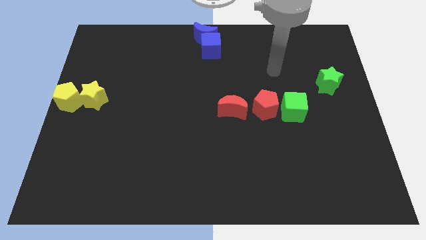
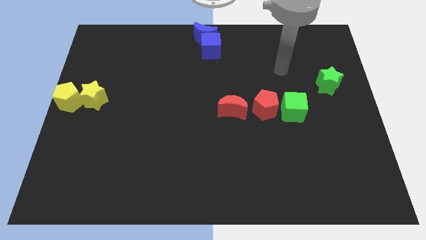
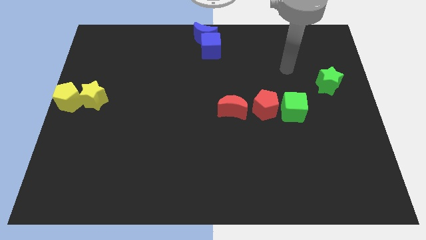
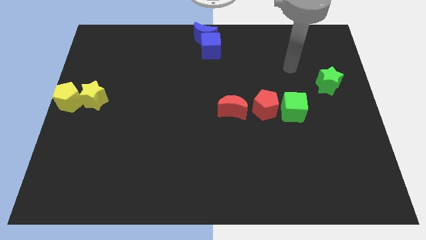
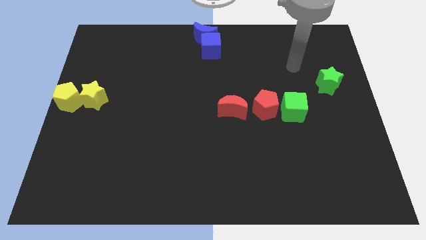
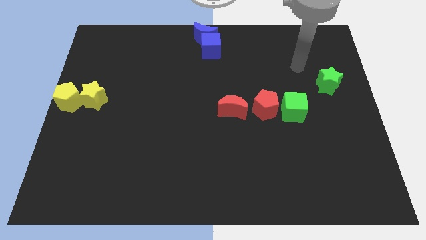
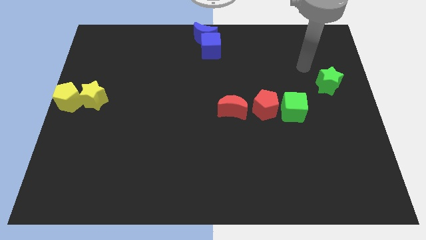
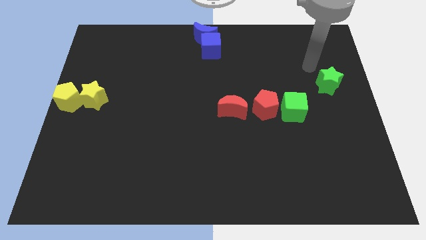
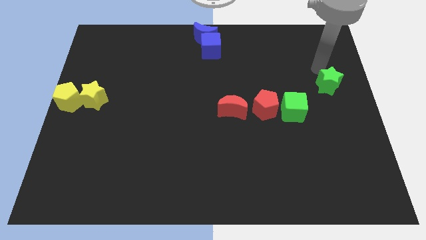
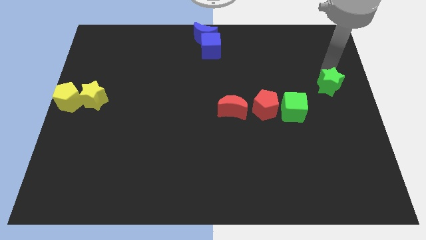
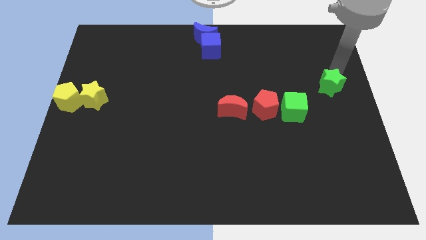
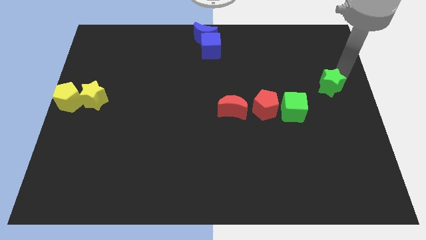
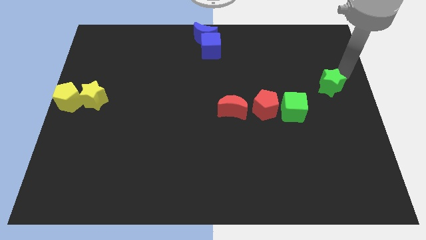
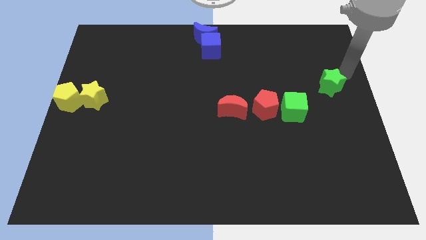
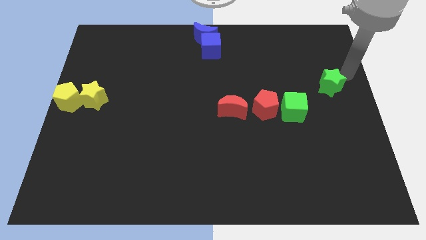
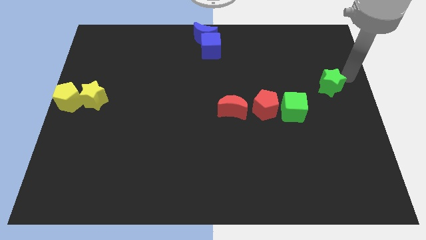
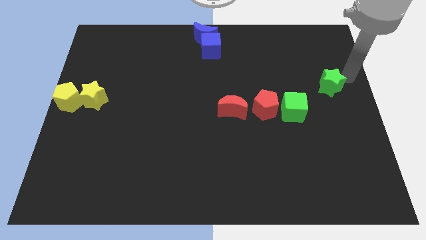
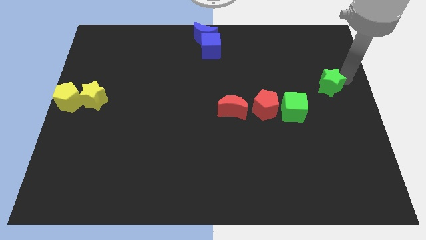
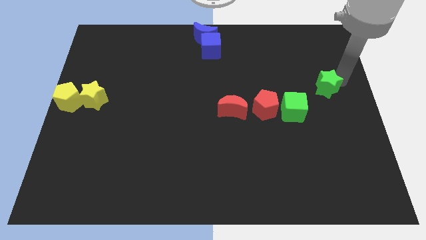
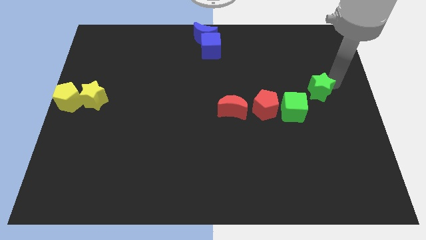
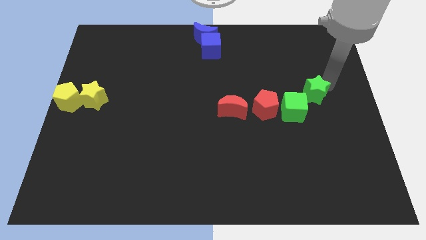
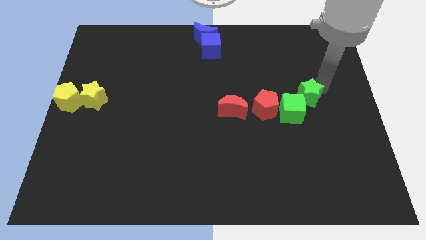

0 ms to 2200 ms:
push the green star into the green cube

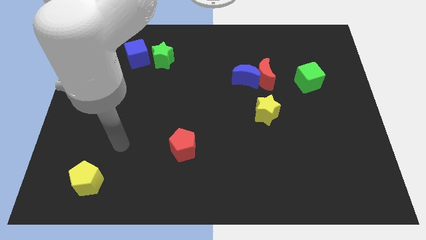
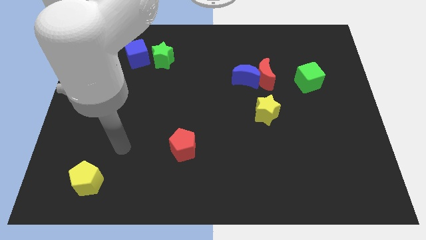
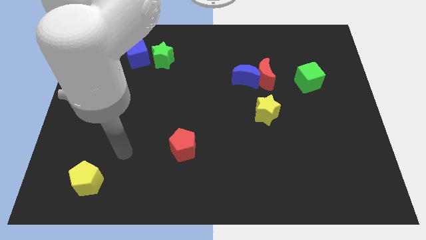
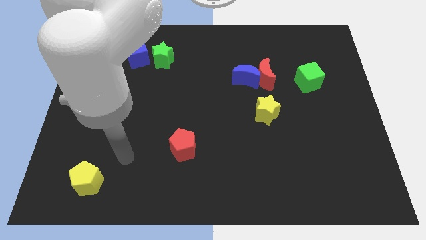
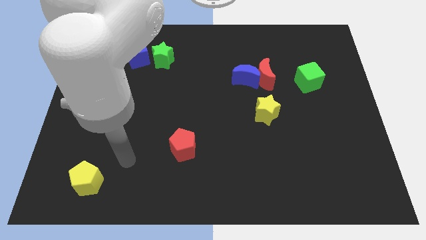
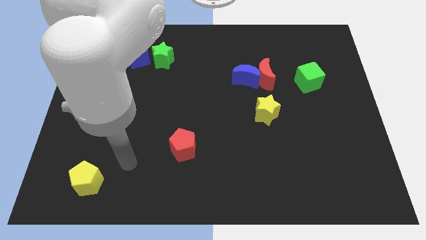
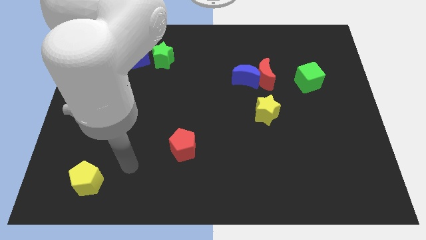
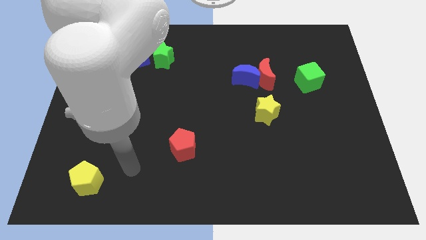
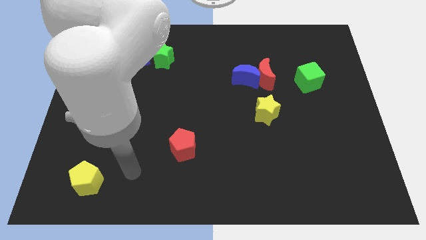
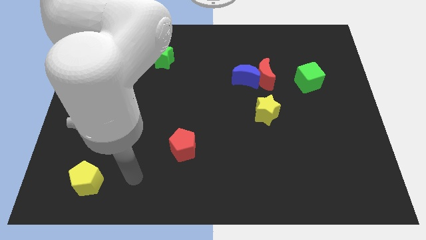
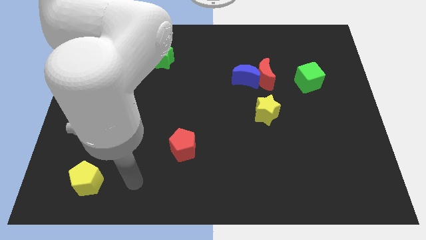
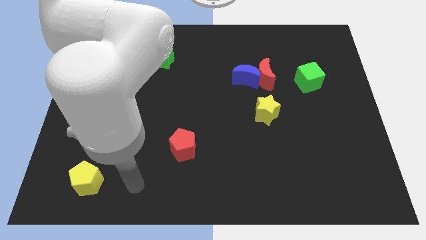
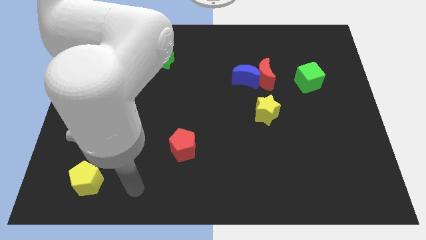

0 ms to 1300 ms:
point your arm at the right of the yellow pentagon

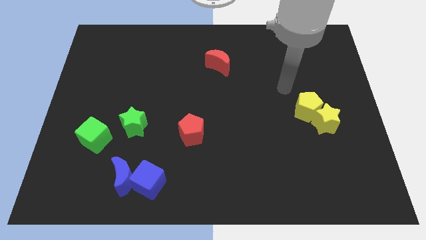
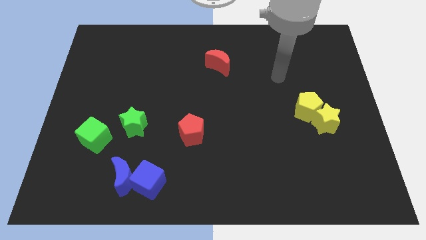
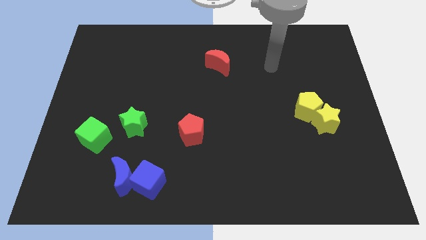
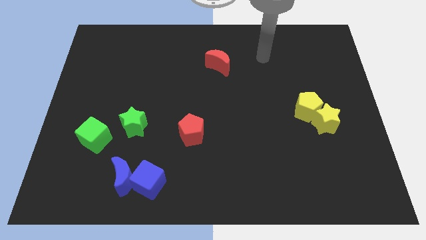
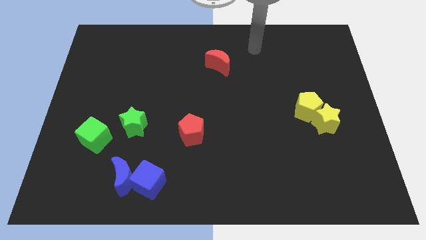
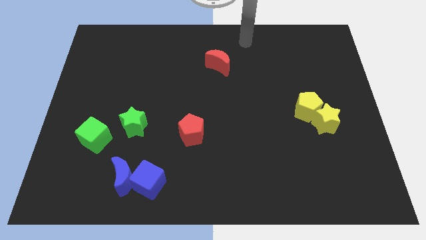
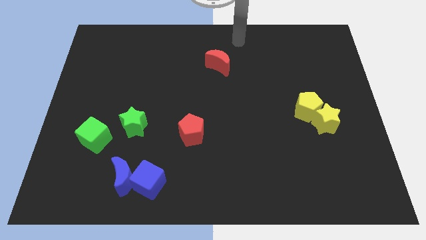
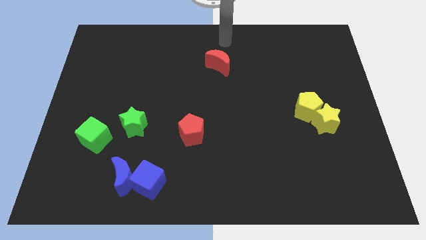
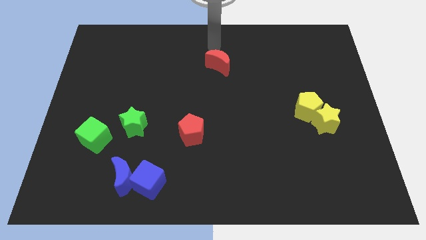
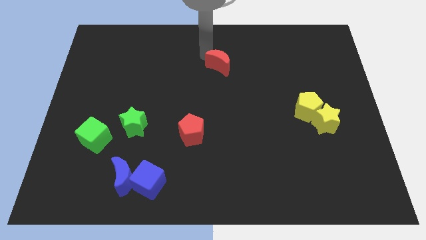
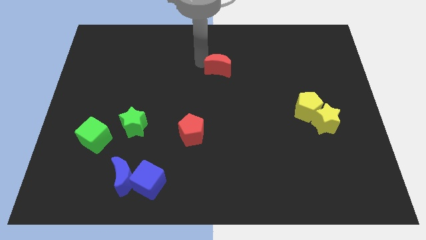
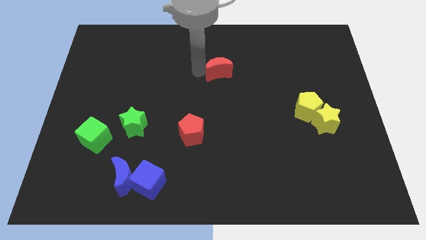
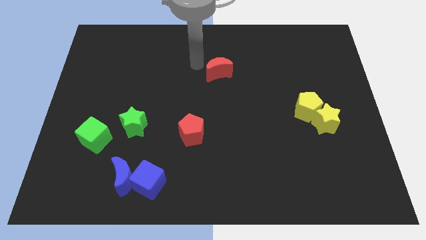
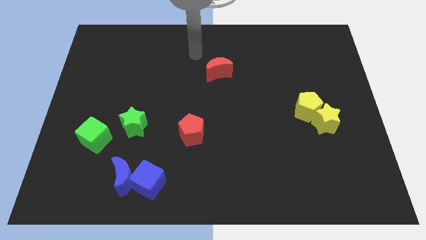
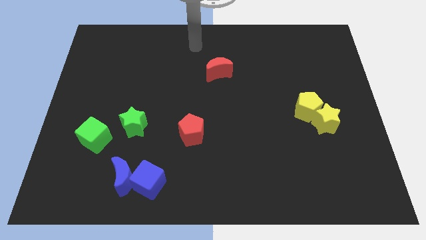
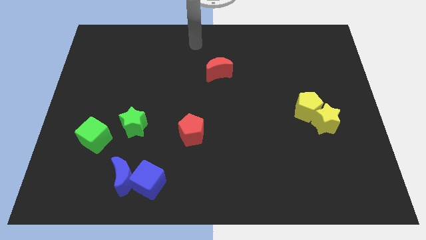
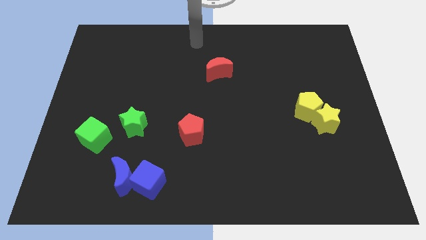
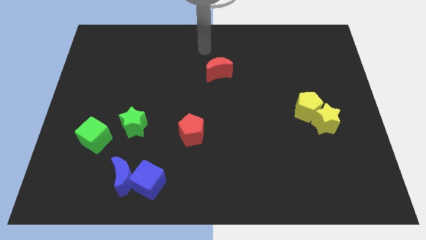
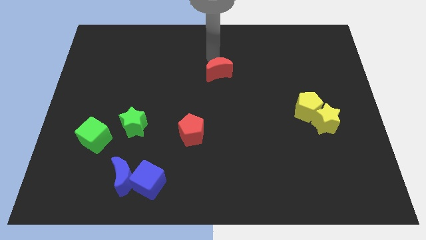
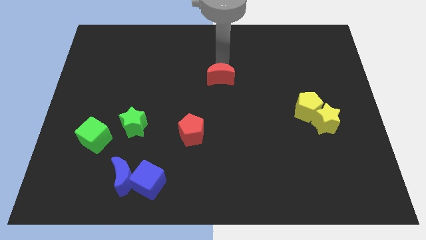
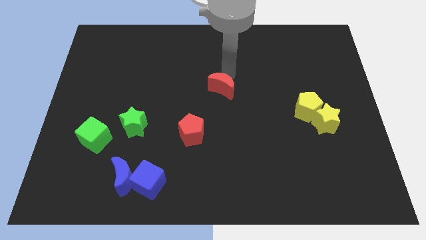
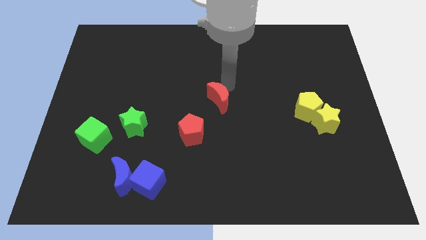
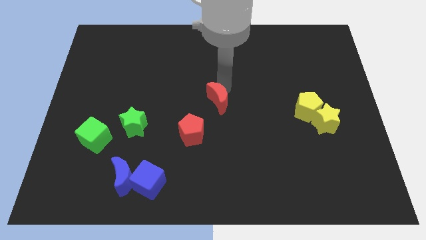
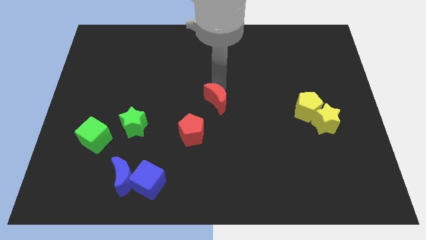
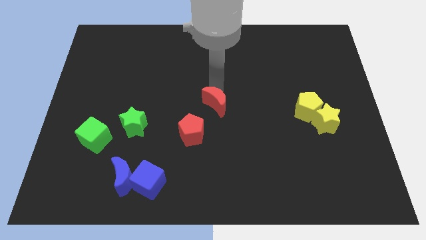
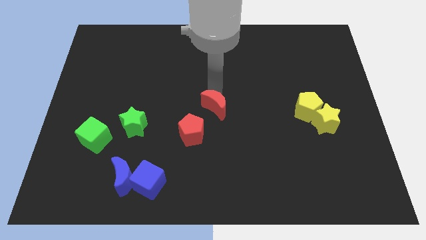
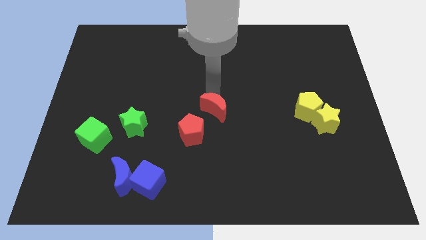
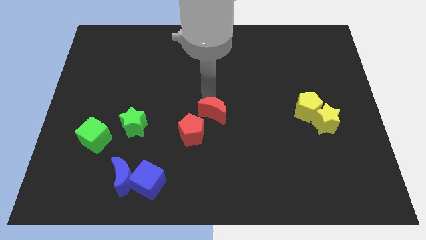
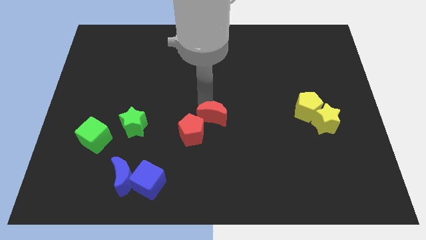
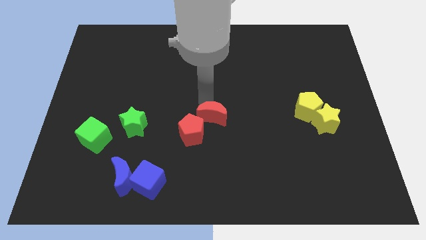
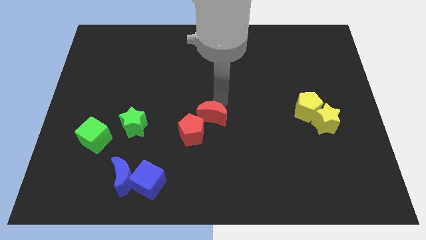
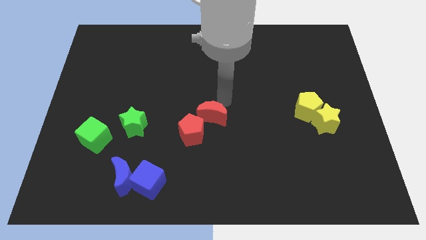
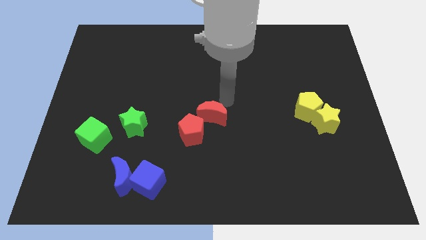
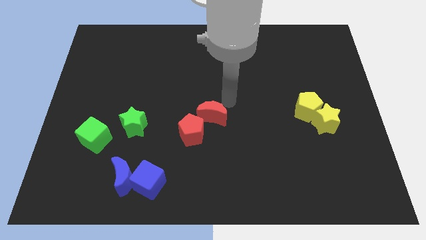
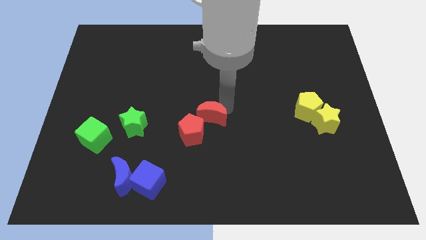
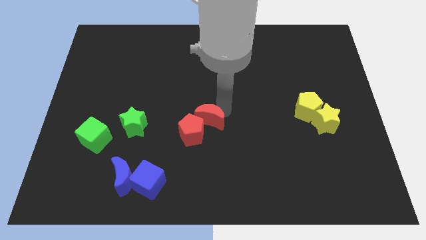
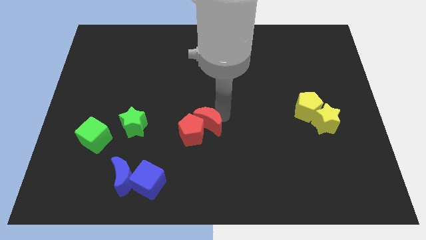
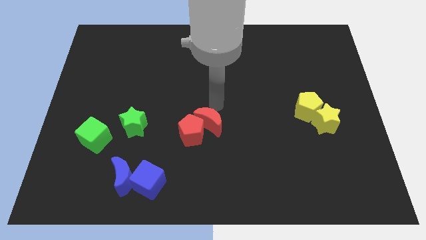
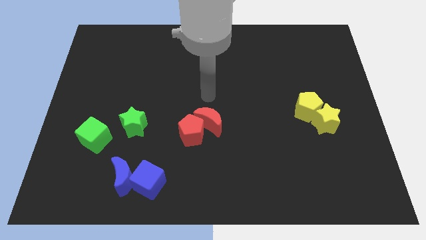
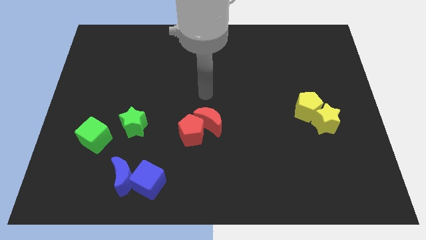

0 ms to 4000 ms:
make the red moon to touch the top right of red pentagon

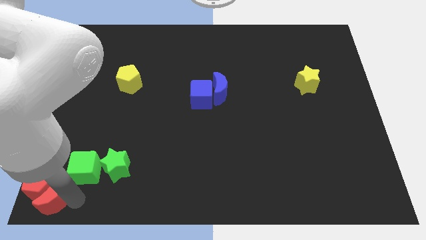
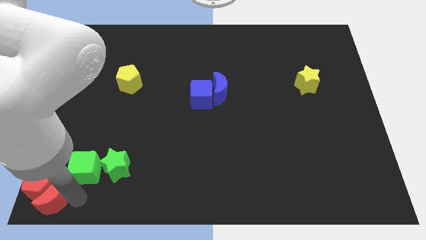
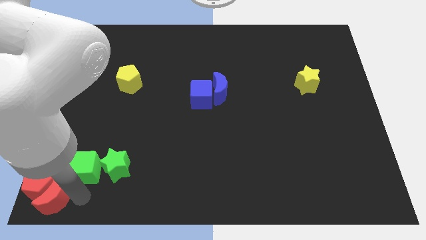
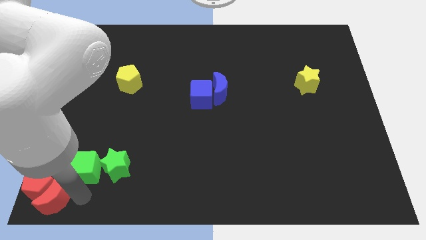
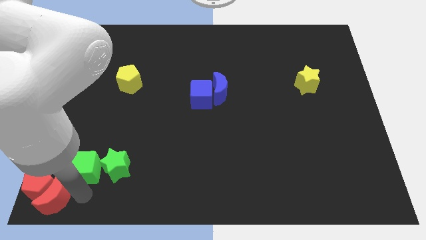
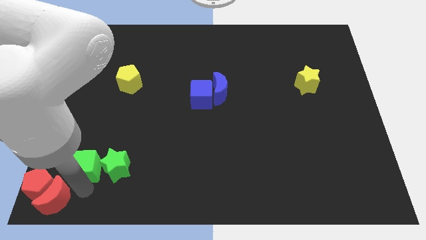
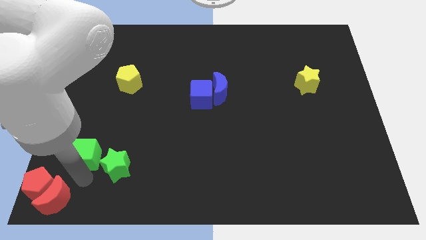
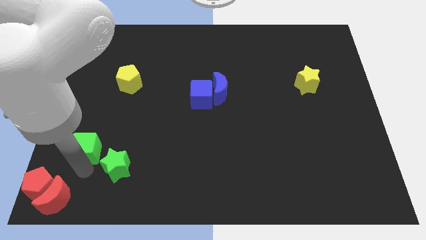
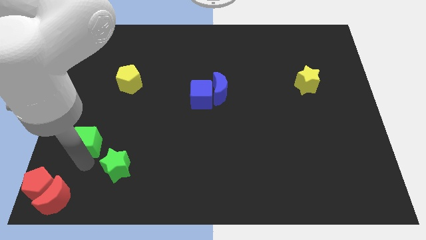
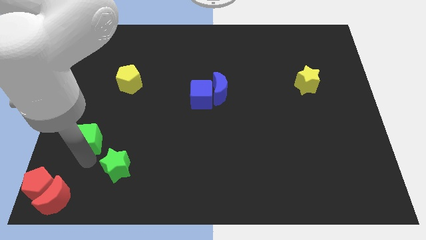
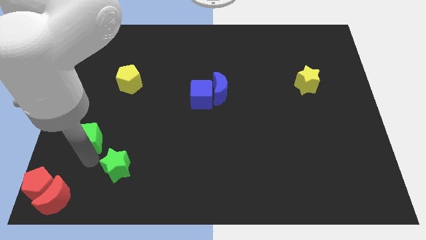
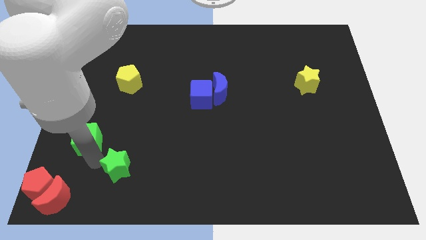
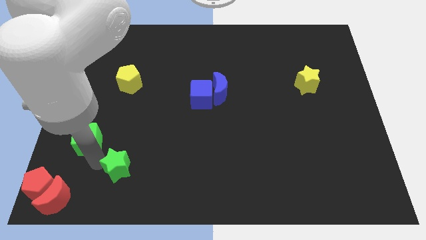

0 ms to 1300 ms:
separate the green cube from green star

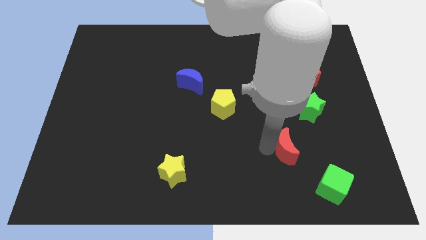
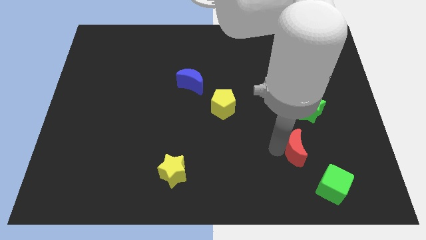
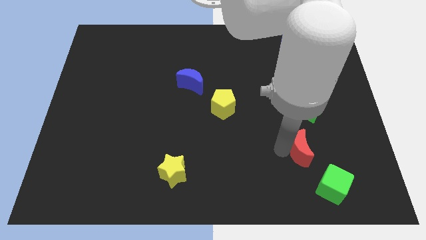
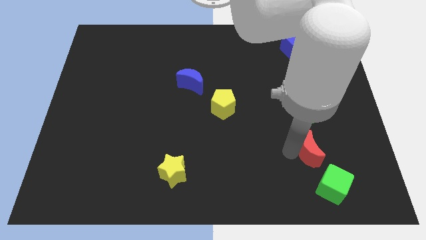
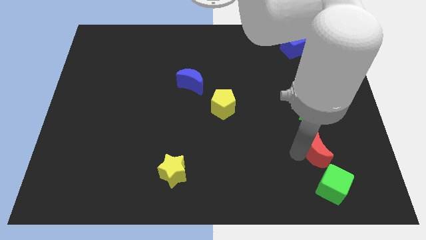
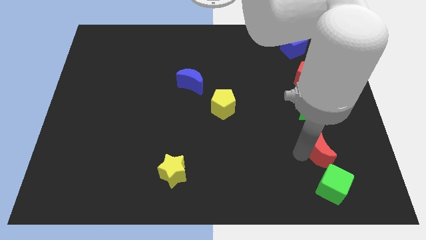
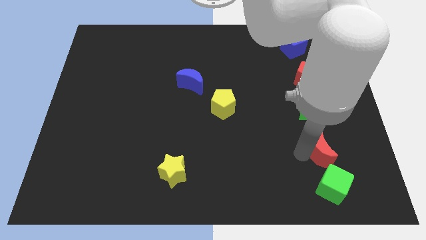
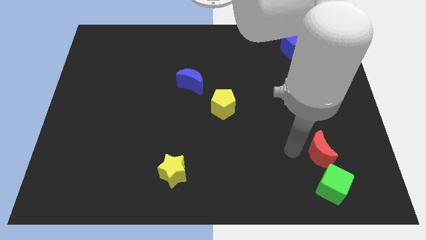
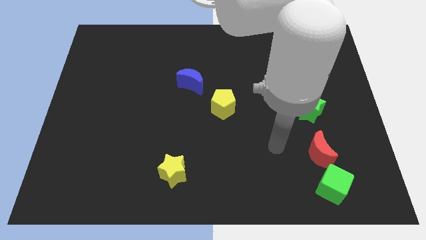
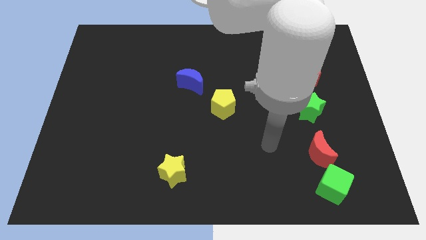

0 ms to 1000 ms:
move the red crescent beside the green block
